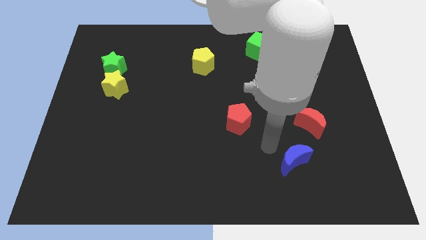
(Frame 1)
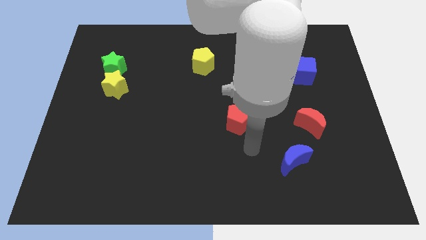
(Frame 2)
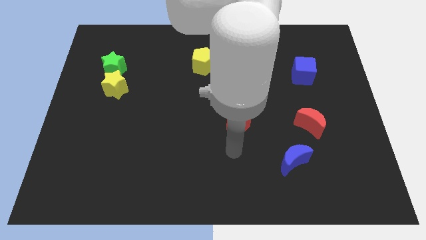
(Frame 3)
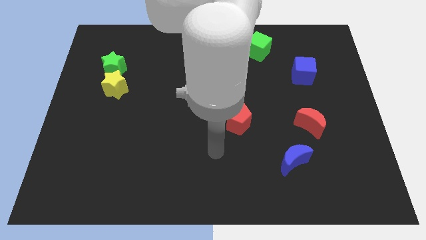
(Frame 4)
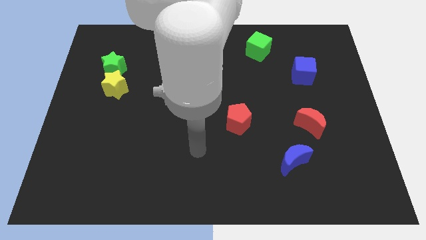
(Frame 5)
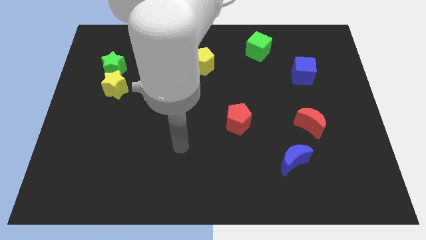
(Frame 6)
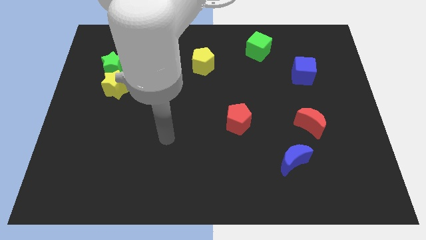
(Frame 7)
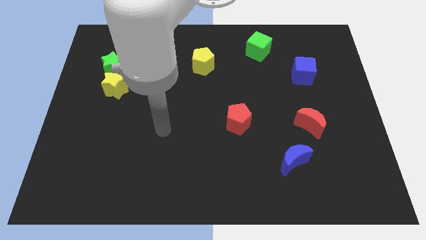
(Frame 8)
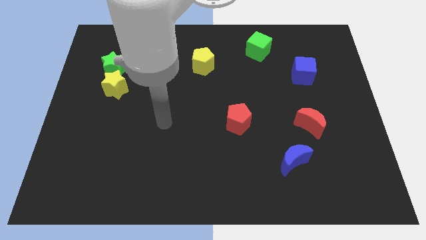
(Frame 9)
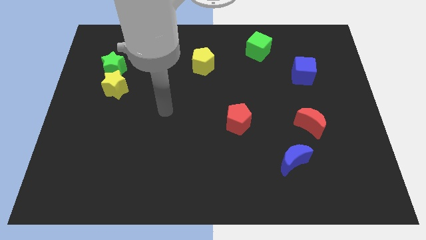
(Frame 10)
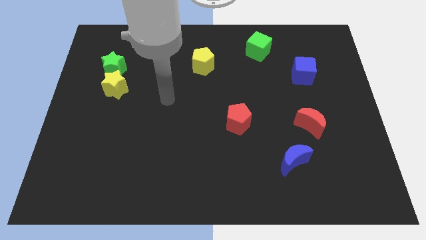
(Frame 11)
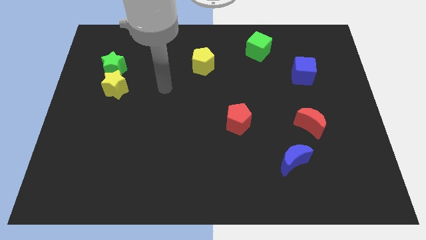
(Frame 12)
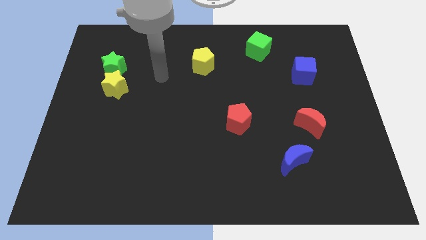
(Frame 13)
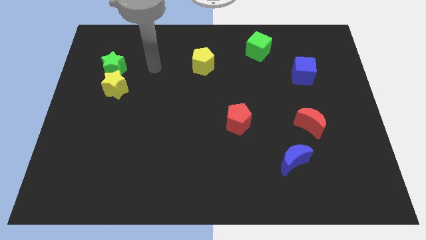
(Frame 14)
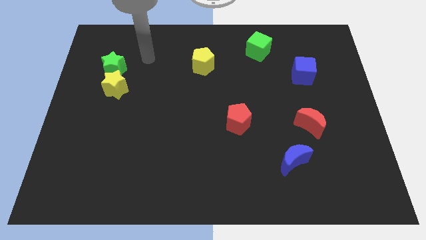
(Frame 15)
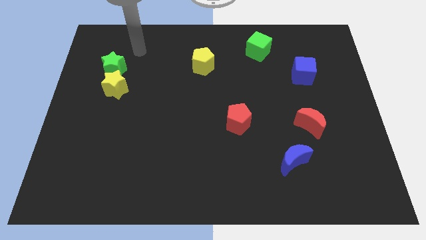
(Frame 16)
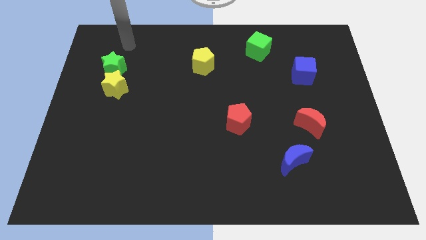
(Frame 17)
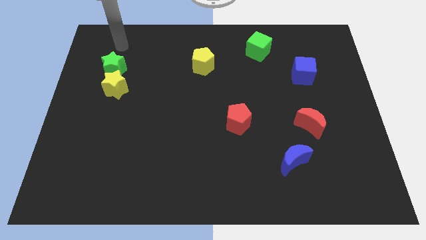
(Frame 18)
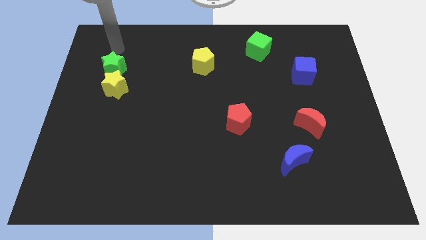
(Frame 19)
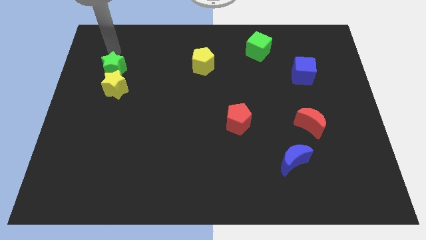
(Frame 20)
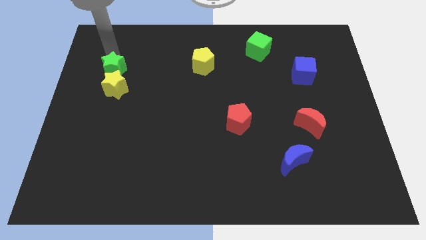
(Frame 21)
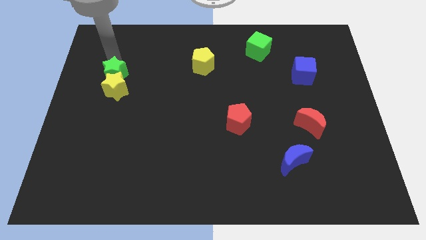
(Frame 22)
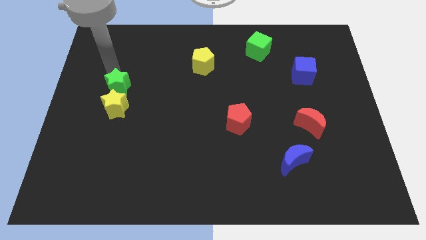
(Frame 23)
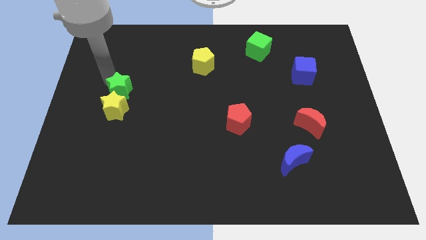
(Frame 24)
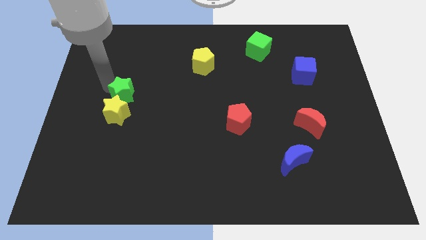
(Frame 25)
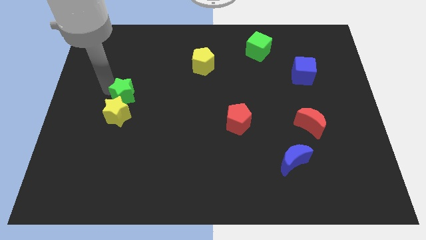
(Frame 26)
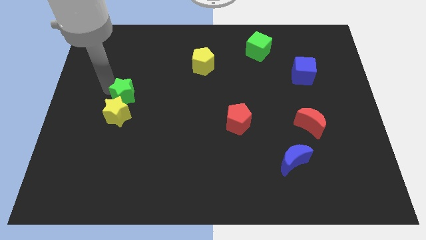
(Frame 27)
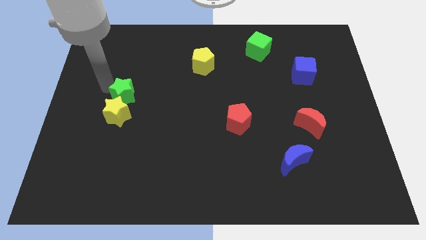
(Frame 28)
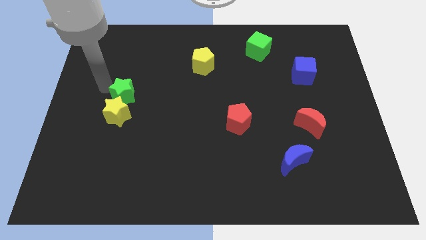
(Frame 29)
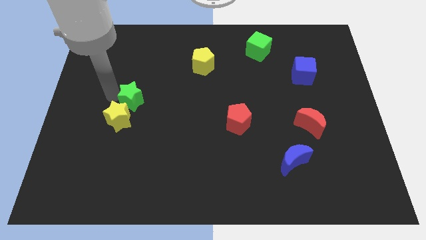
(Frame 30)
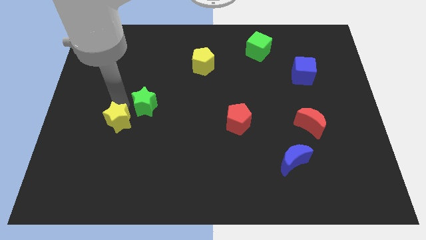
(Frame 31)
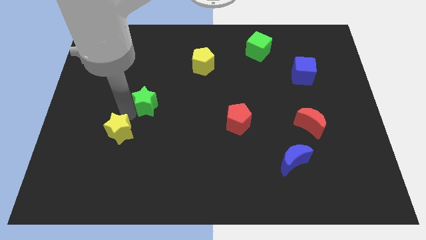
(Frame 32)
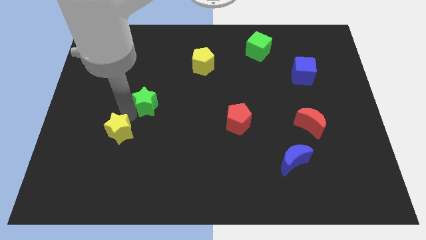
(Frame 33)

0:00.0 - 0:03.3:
separate the both green and yellow stars

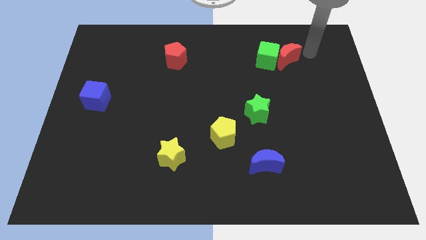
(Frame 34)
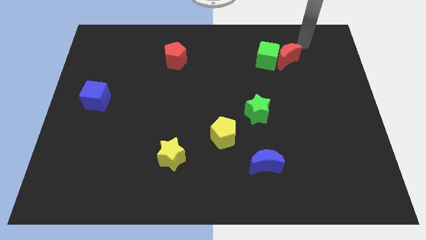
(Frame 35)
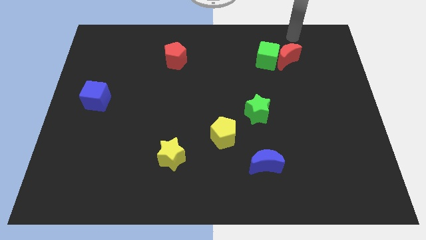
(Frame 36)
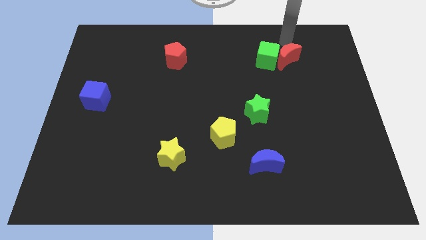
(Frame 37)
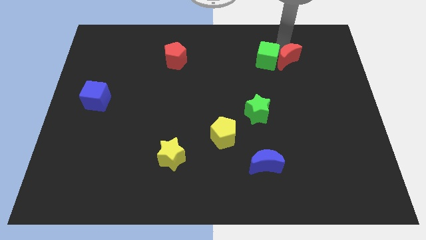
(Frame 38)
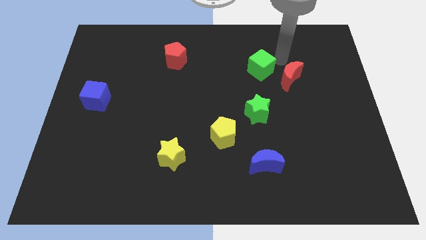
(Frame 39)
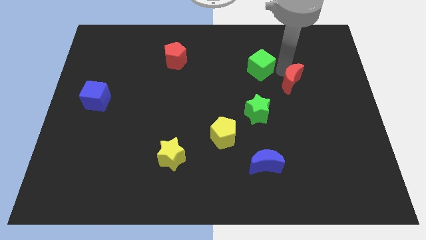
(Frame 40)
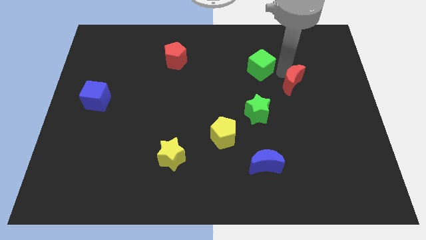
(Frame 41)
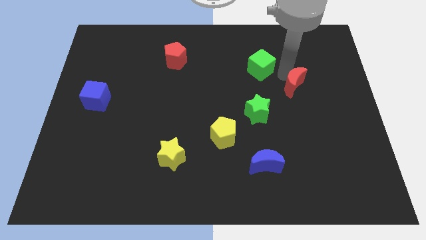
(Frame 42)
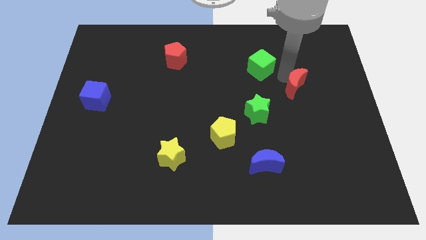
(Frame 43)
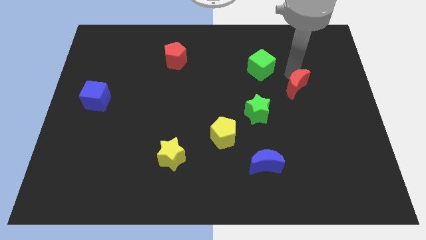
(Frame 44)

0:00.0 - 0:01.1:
separate red moon from green cube

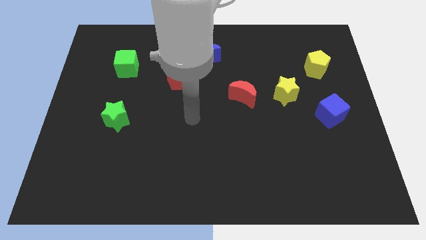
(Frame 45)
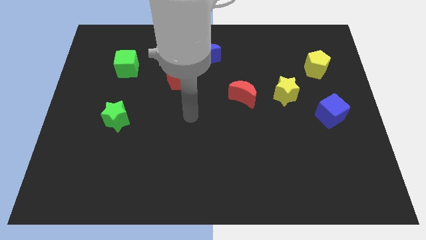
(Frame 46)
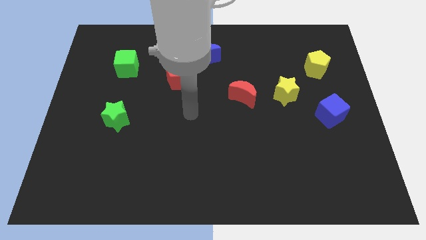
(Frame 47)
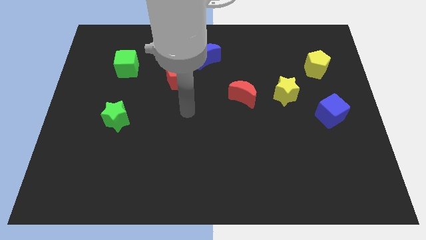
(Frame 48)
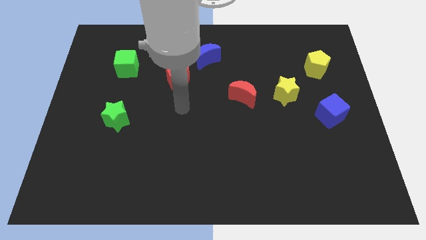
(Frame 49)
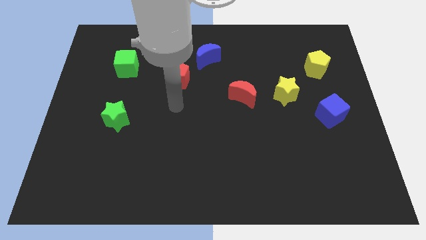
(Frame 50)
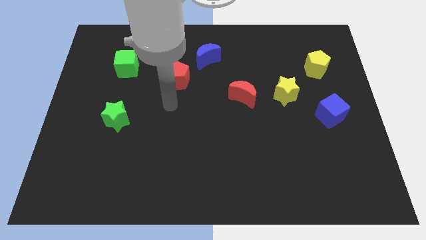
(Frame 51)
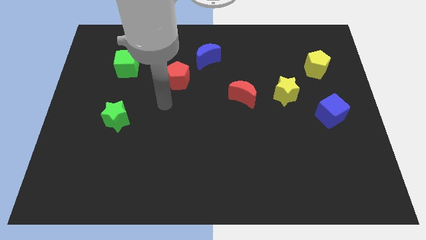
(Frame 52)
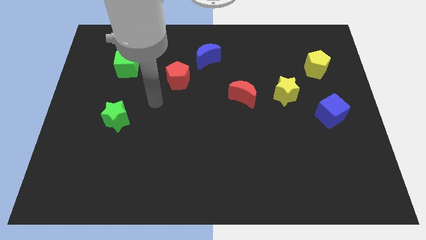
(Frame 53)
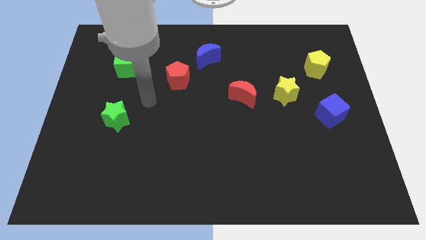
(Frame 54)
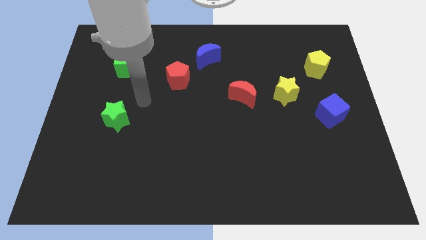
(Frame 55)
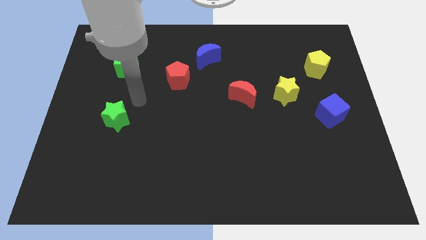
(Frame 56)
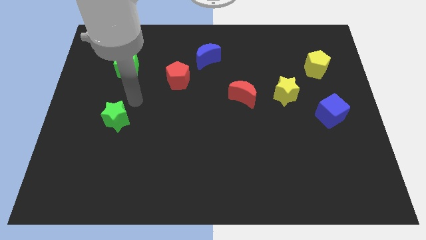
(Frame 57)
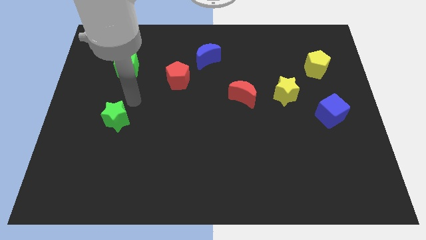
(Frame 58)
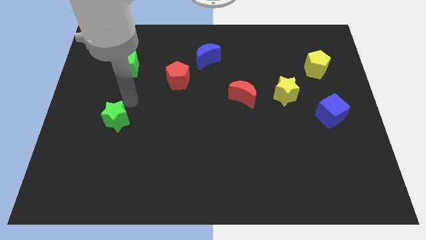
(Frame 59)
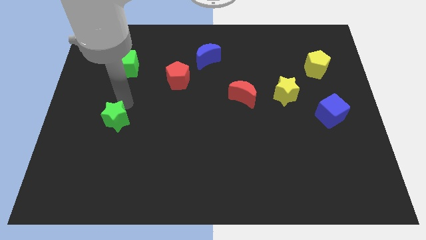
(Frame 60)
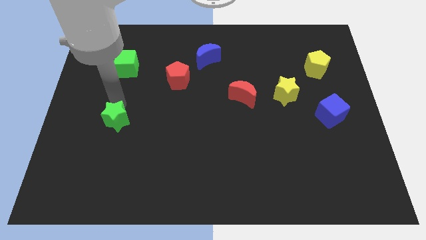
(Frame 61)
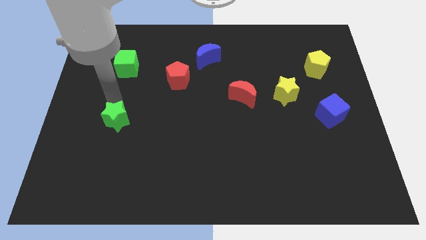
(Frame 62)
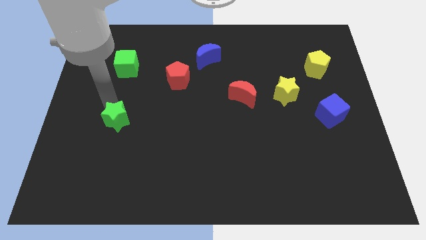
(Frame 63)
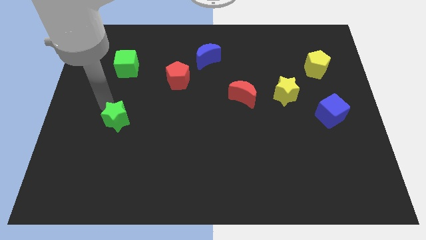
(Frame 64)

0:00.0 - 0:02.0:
point your arm at the top of the green star

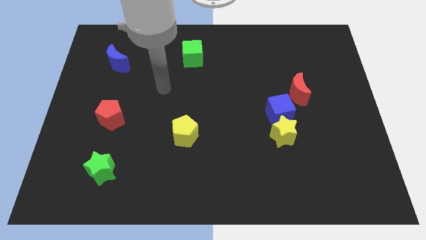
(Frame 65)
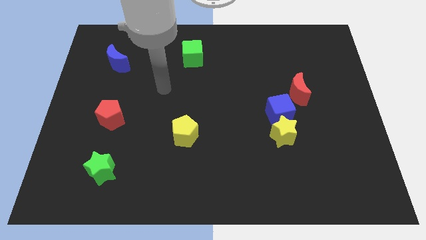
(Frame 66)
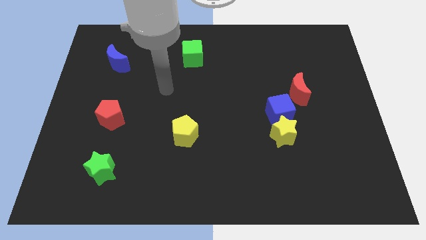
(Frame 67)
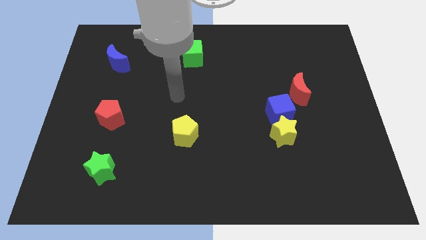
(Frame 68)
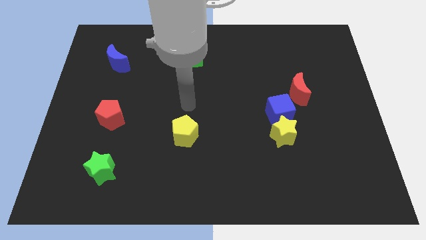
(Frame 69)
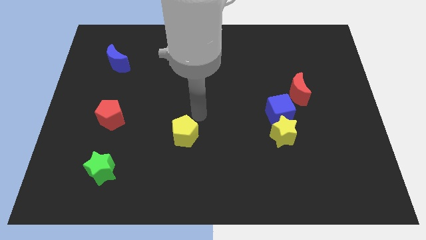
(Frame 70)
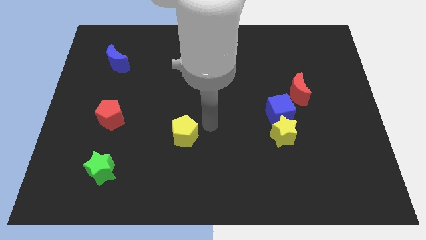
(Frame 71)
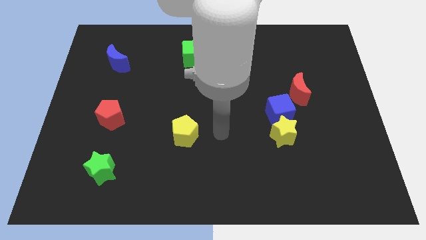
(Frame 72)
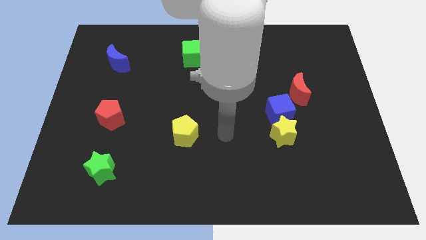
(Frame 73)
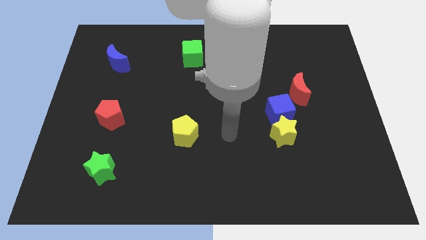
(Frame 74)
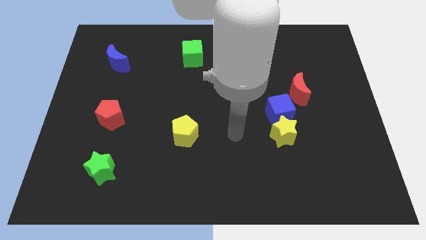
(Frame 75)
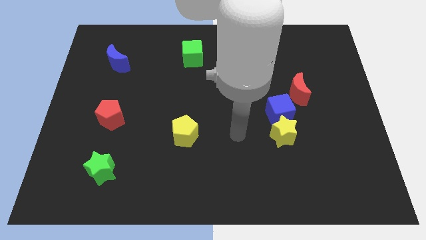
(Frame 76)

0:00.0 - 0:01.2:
place your hand in between the yellow star and the yellow pentagon

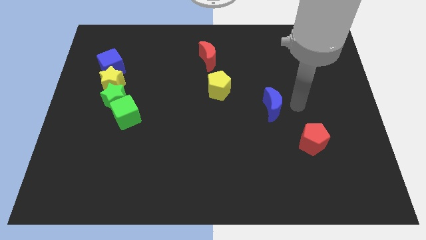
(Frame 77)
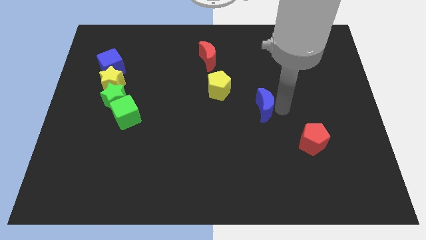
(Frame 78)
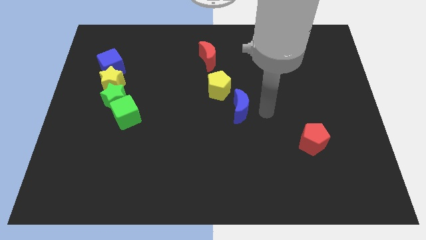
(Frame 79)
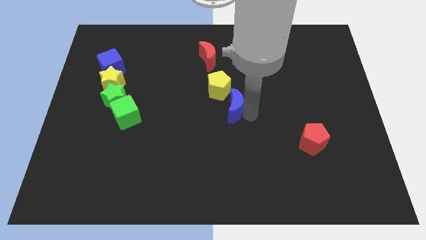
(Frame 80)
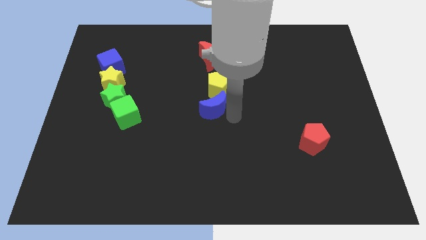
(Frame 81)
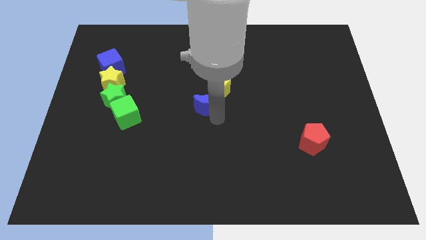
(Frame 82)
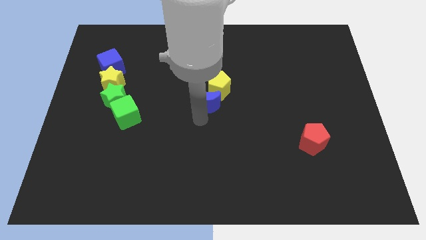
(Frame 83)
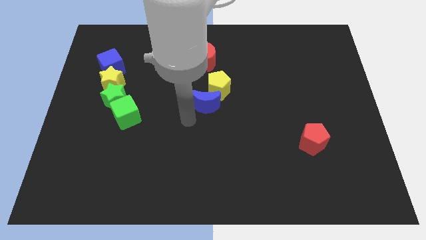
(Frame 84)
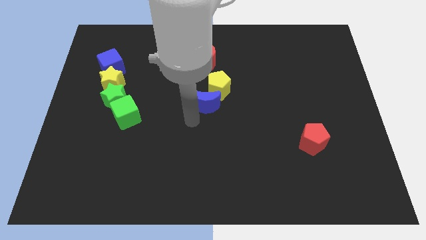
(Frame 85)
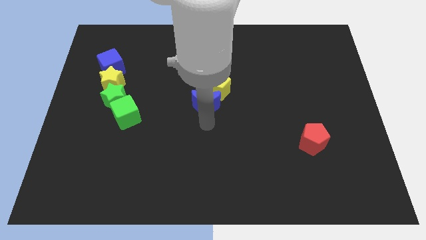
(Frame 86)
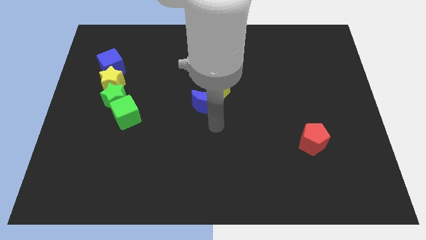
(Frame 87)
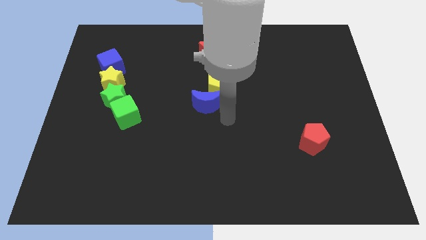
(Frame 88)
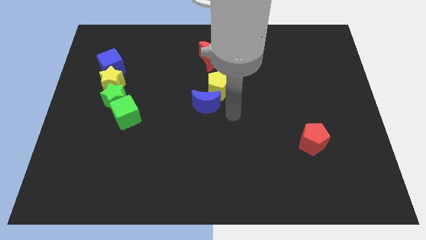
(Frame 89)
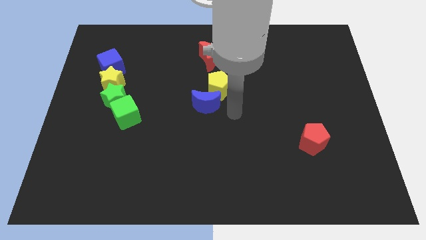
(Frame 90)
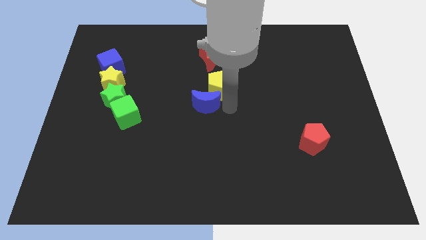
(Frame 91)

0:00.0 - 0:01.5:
move the blue crescent to the center
